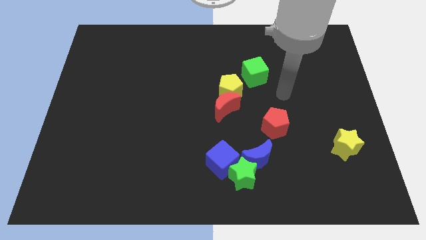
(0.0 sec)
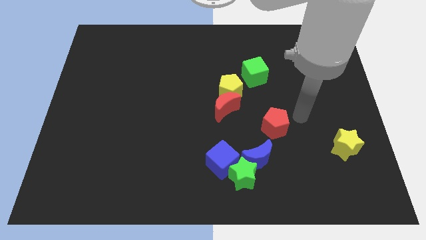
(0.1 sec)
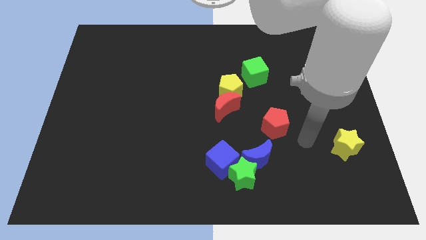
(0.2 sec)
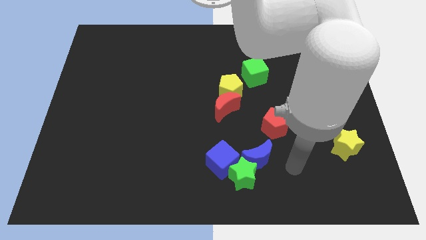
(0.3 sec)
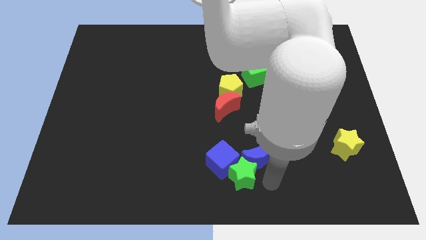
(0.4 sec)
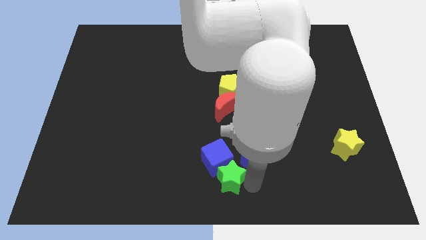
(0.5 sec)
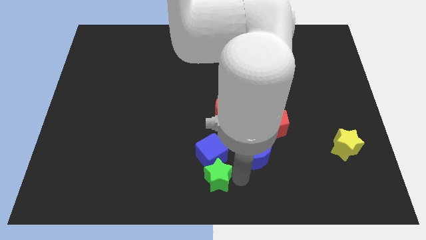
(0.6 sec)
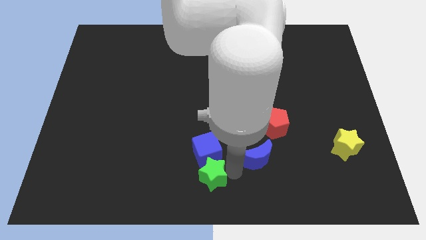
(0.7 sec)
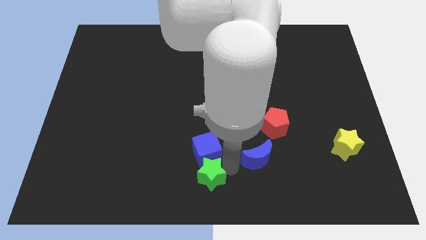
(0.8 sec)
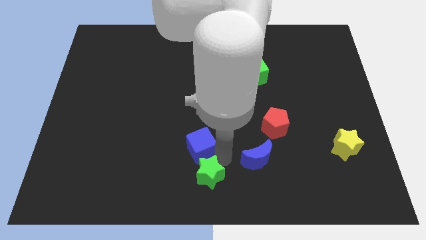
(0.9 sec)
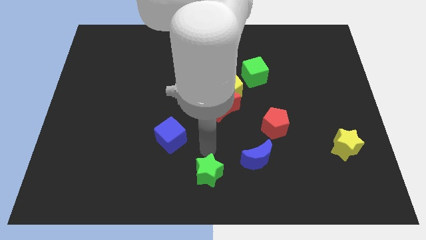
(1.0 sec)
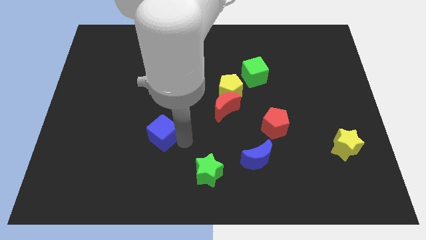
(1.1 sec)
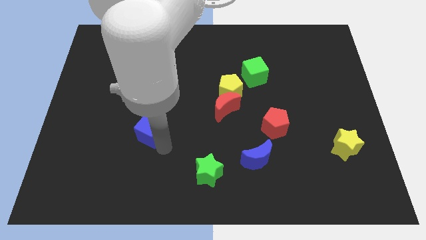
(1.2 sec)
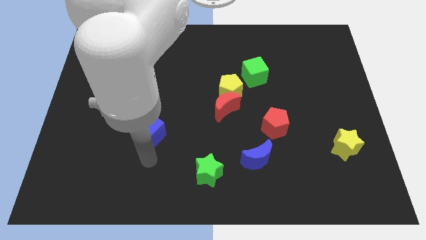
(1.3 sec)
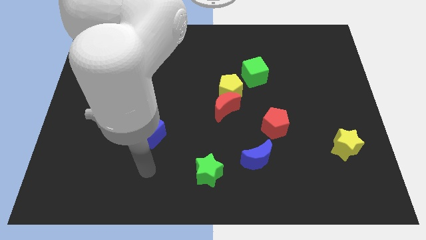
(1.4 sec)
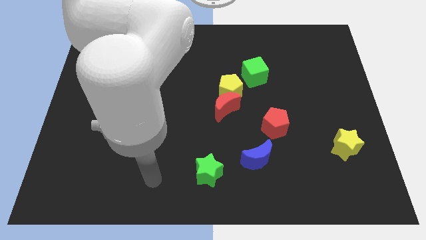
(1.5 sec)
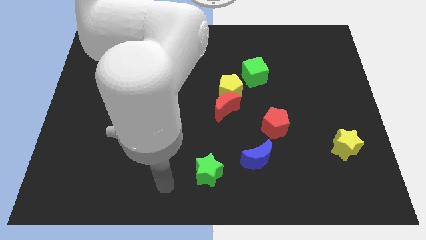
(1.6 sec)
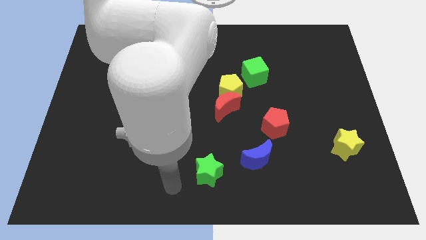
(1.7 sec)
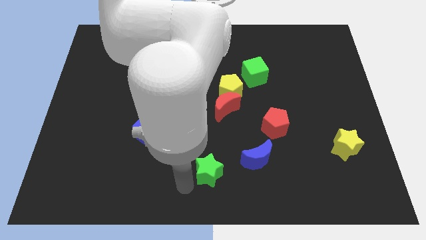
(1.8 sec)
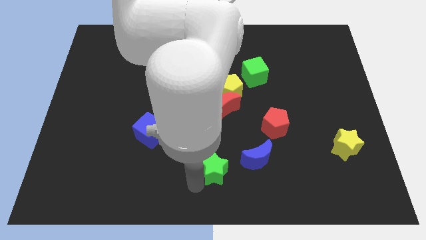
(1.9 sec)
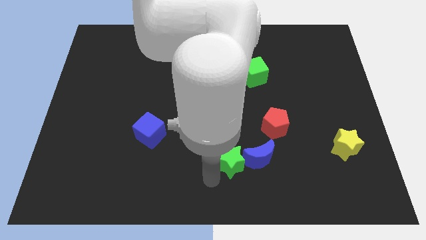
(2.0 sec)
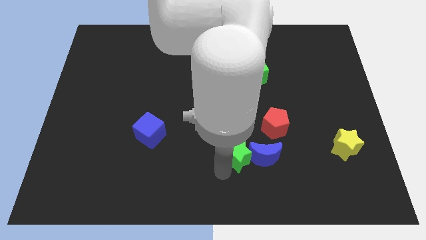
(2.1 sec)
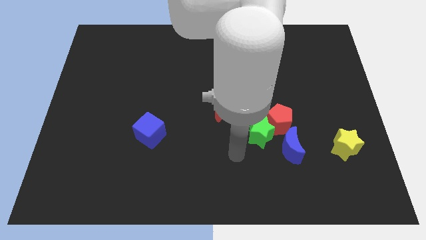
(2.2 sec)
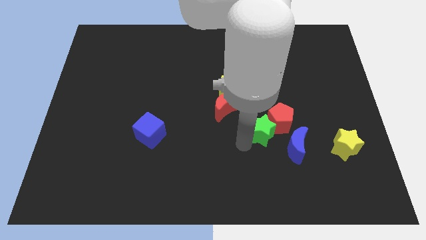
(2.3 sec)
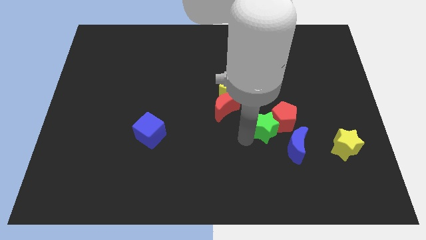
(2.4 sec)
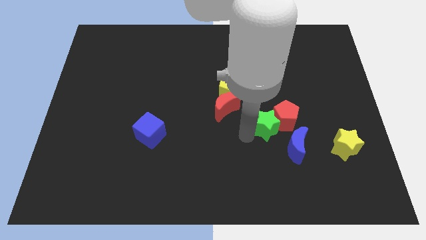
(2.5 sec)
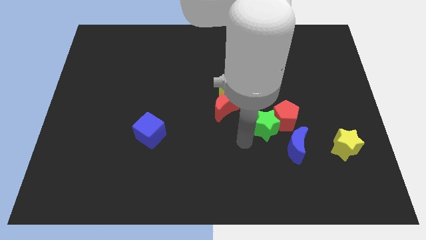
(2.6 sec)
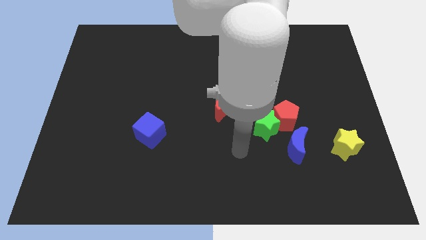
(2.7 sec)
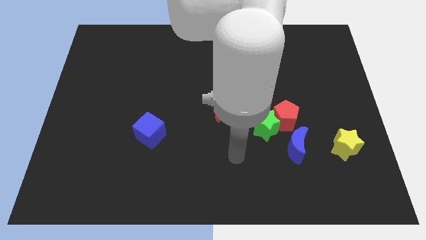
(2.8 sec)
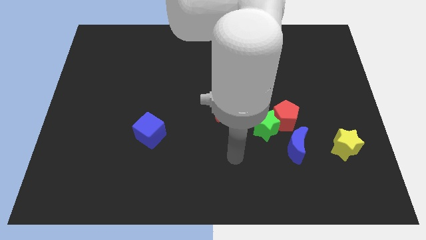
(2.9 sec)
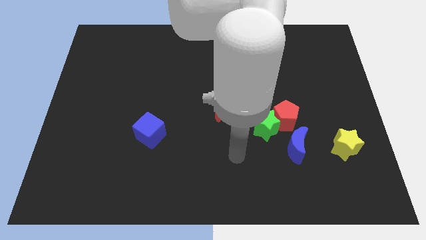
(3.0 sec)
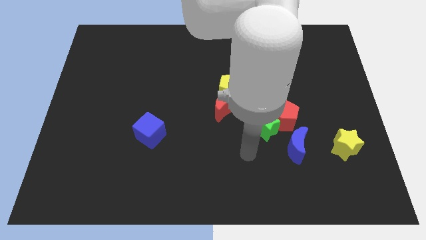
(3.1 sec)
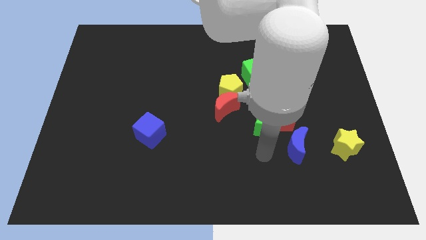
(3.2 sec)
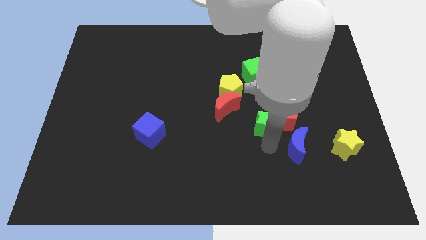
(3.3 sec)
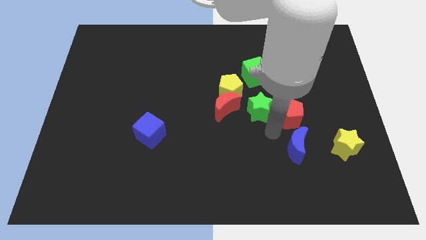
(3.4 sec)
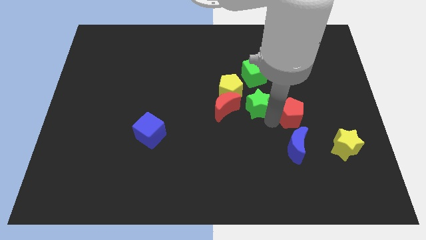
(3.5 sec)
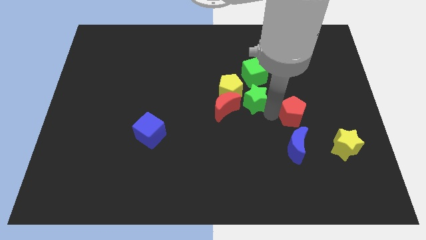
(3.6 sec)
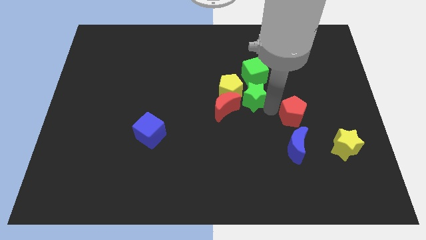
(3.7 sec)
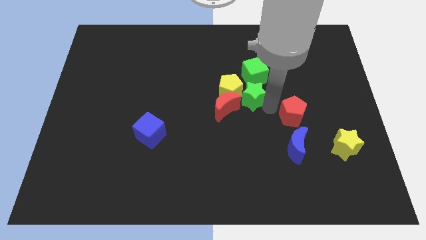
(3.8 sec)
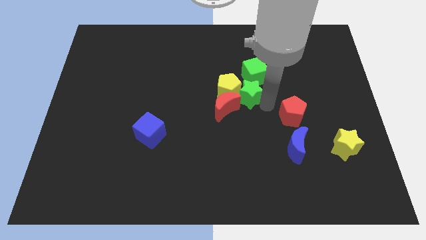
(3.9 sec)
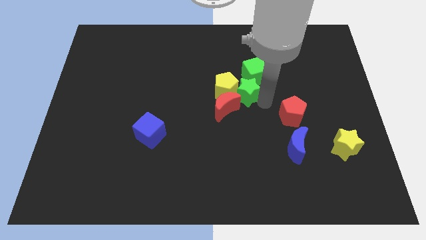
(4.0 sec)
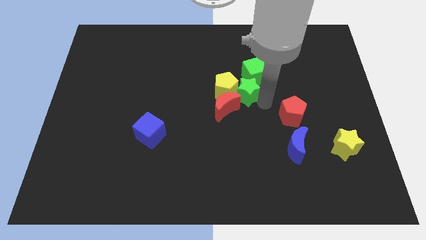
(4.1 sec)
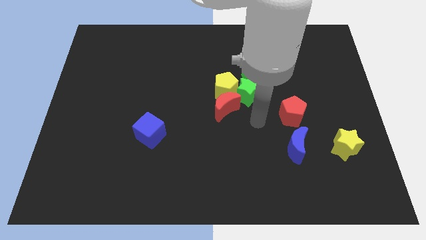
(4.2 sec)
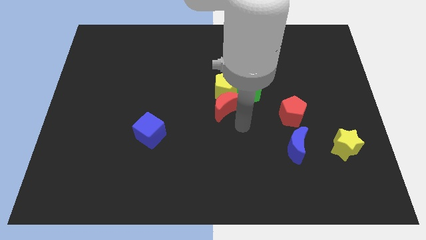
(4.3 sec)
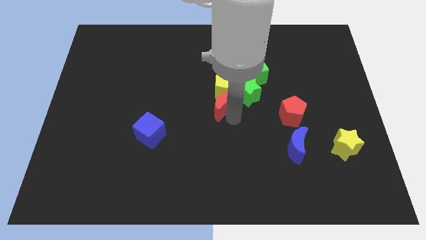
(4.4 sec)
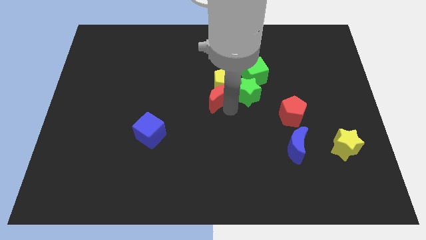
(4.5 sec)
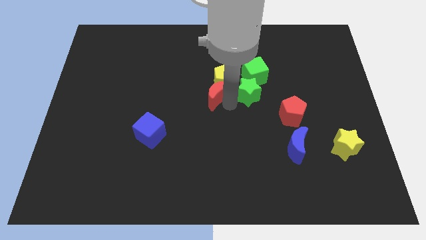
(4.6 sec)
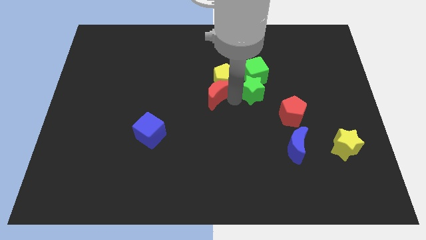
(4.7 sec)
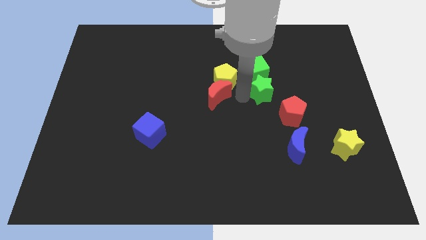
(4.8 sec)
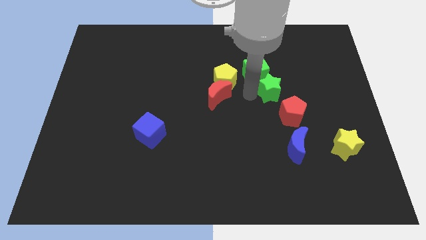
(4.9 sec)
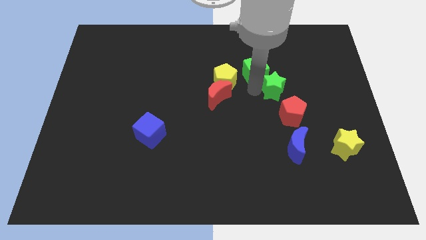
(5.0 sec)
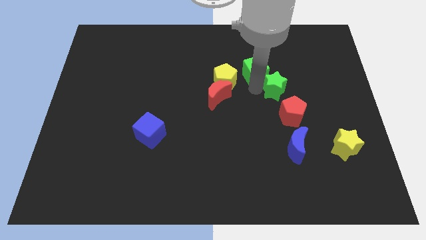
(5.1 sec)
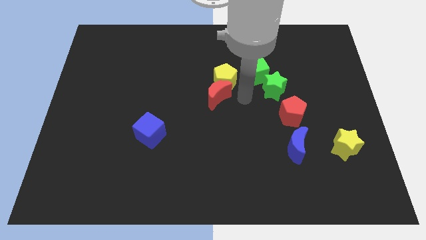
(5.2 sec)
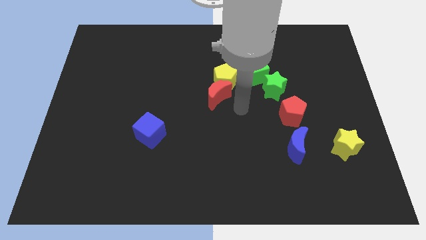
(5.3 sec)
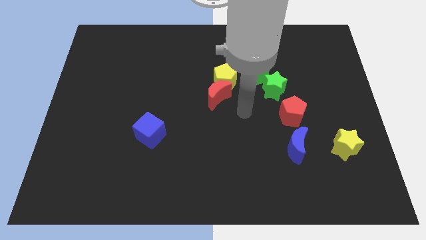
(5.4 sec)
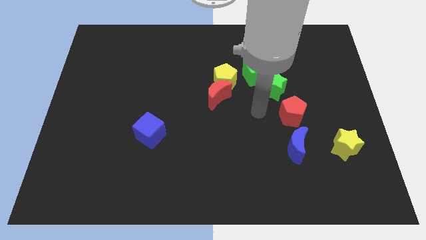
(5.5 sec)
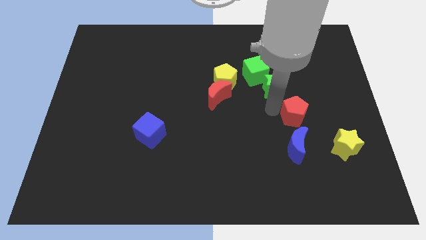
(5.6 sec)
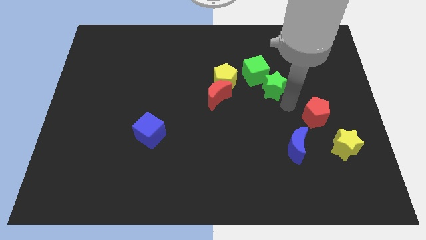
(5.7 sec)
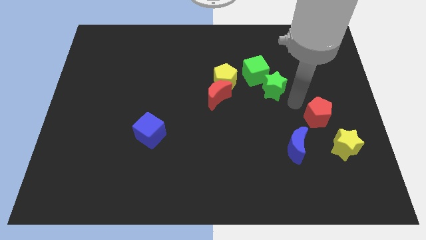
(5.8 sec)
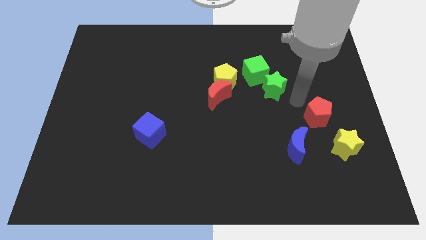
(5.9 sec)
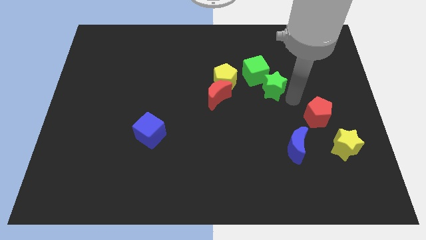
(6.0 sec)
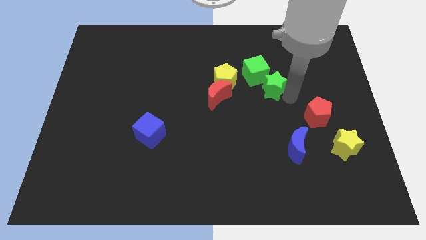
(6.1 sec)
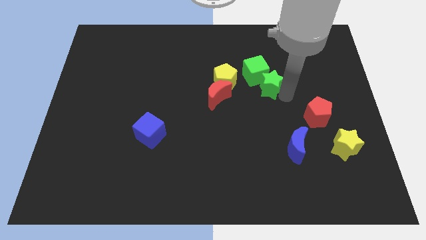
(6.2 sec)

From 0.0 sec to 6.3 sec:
move the green star towards the green cube

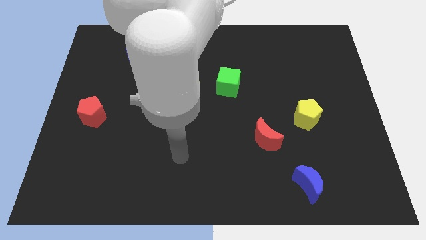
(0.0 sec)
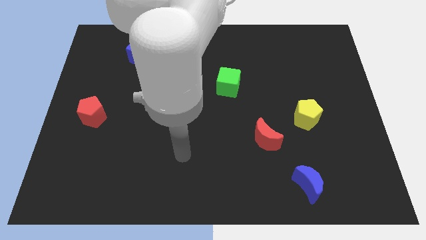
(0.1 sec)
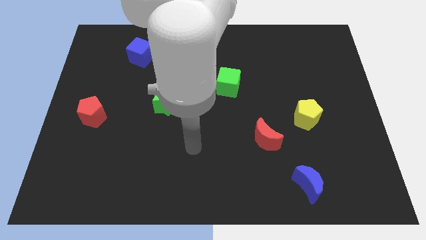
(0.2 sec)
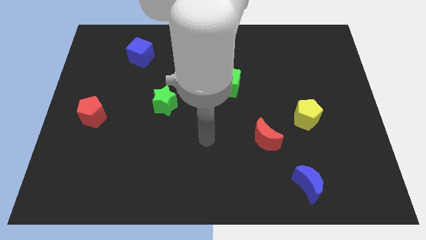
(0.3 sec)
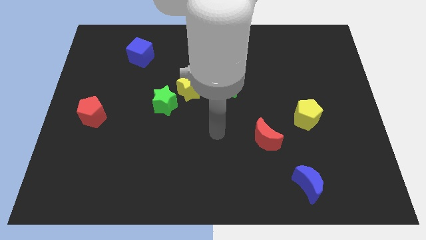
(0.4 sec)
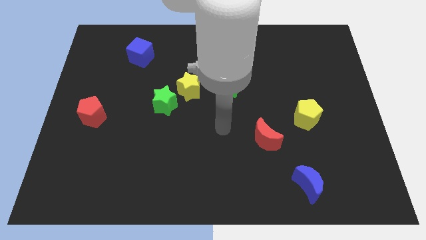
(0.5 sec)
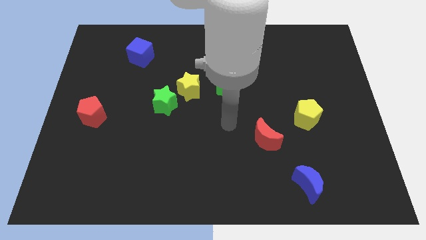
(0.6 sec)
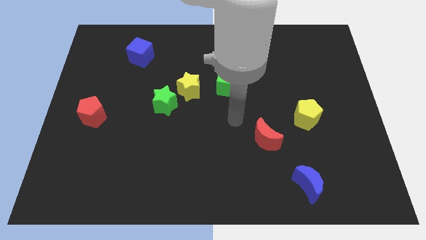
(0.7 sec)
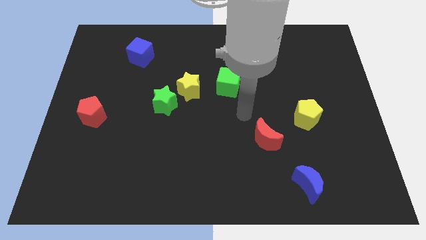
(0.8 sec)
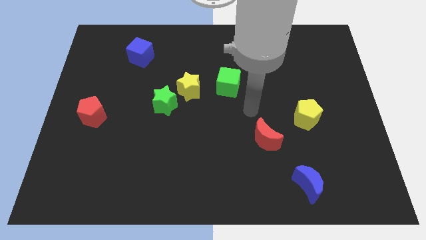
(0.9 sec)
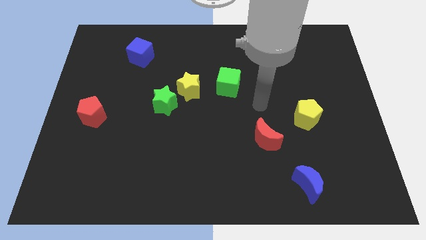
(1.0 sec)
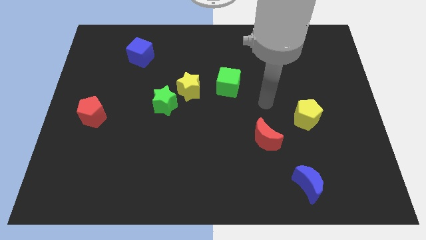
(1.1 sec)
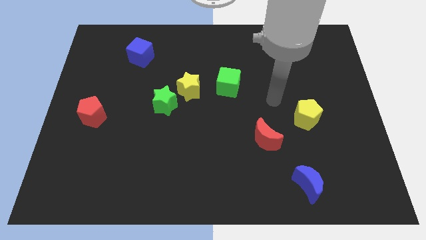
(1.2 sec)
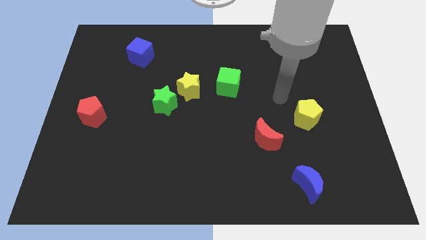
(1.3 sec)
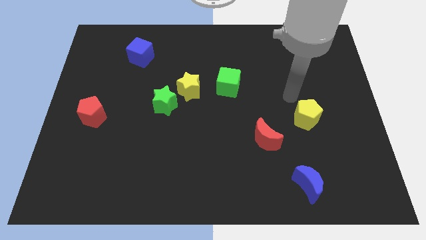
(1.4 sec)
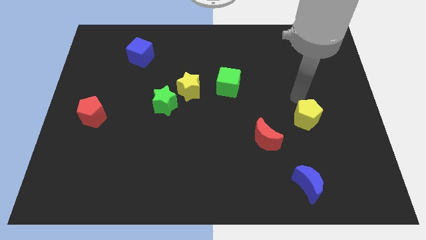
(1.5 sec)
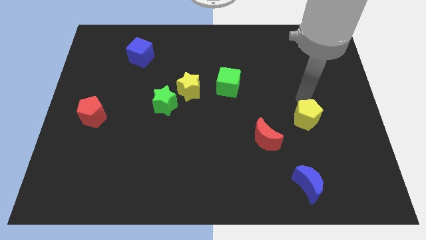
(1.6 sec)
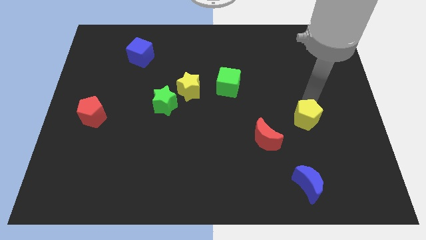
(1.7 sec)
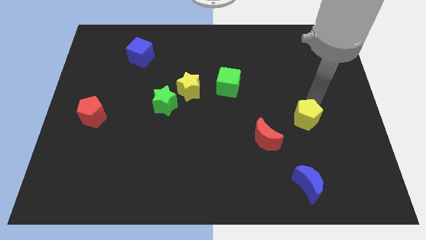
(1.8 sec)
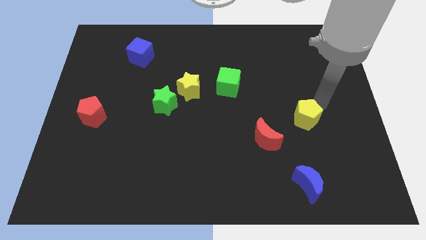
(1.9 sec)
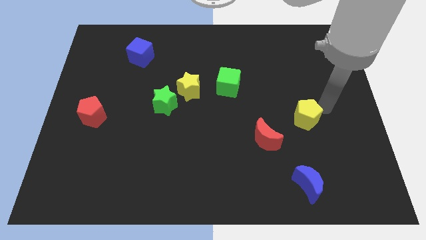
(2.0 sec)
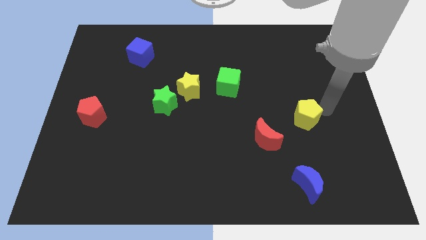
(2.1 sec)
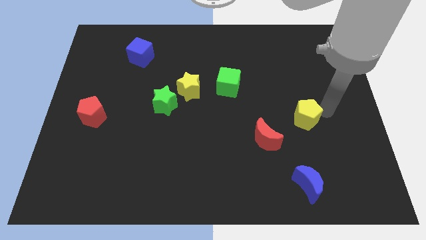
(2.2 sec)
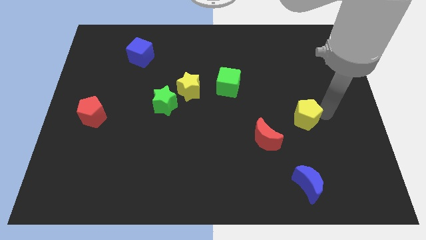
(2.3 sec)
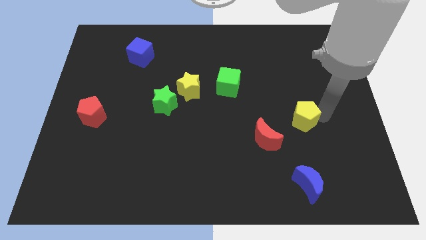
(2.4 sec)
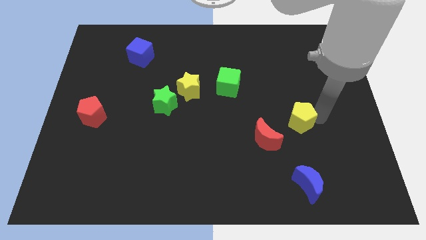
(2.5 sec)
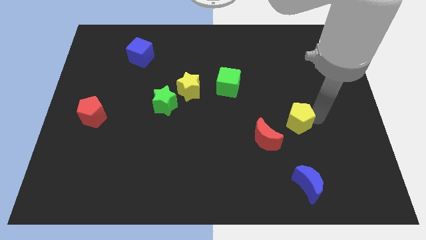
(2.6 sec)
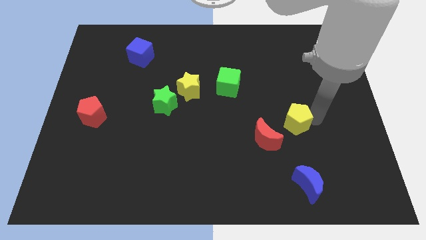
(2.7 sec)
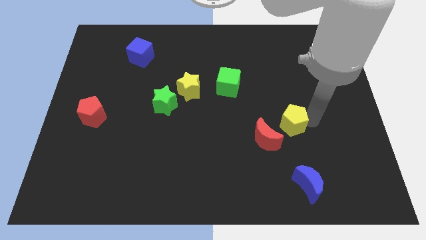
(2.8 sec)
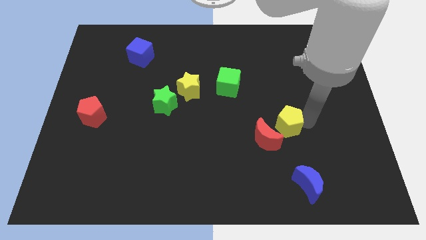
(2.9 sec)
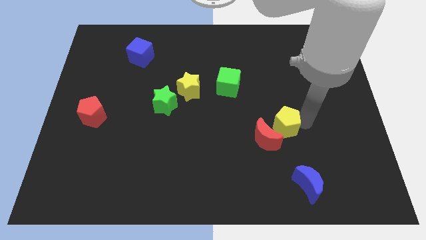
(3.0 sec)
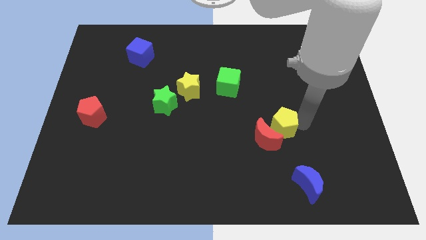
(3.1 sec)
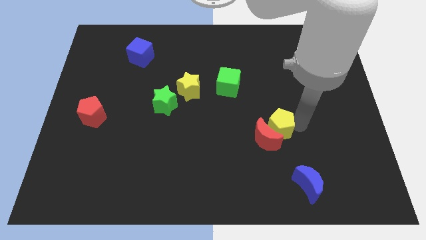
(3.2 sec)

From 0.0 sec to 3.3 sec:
put the yellow pentagon close to the red moon
